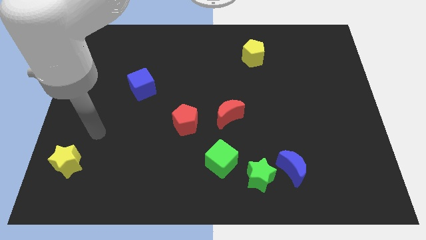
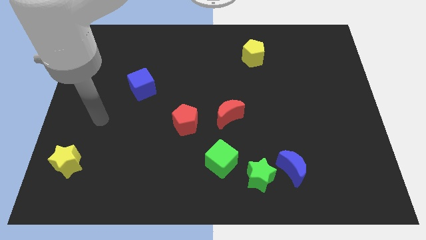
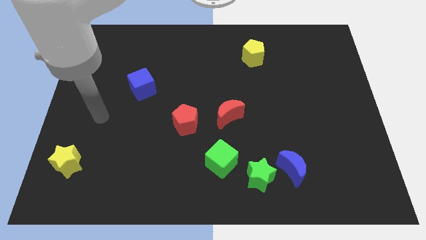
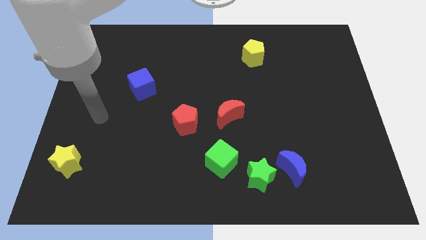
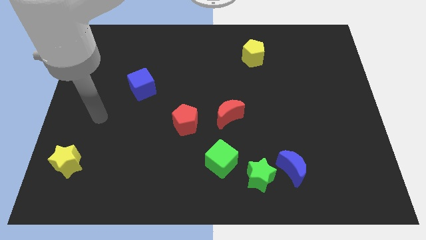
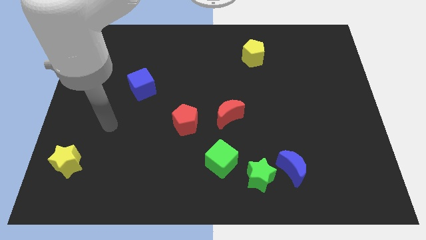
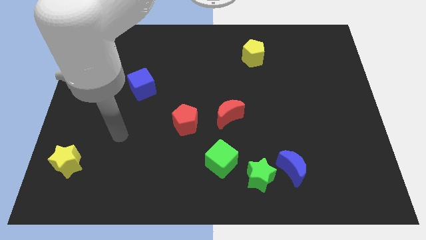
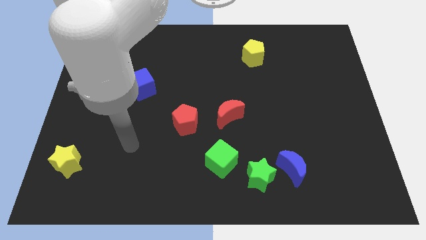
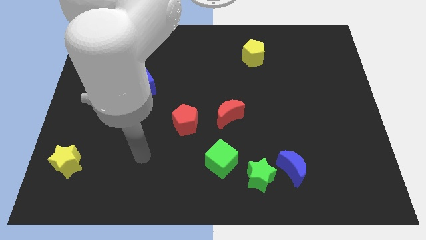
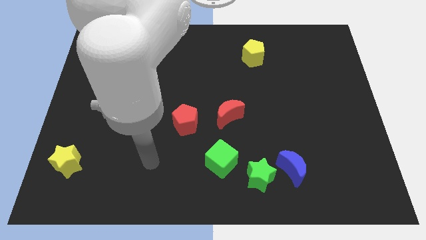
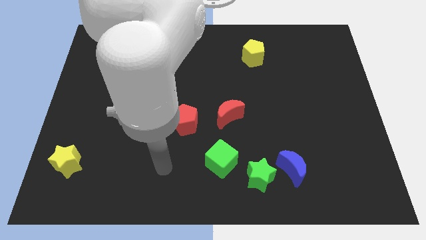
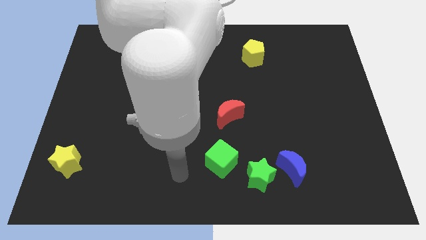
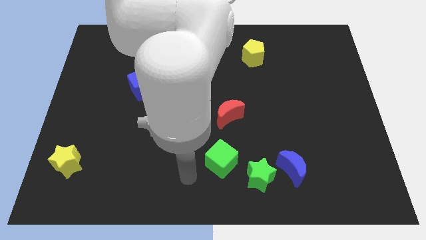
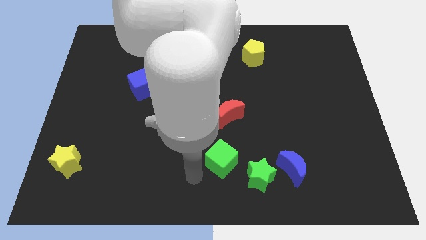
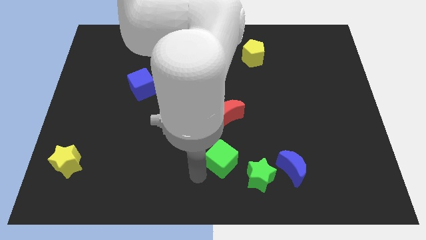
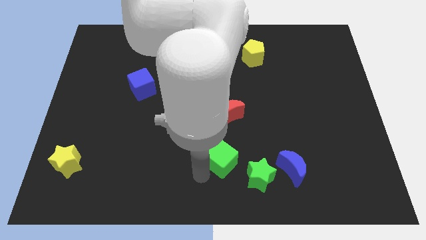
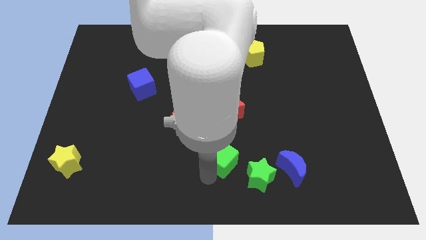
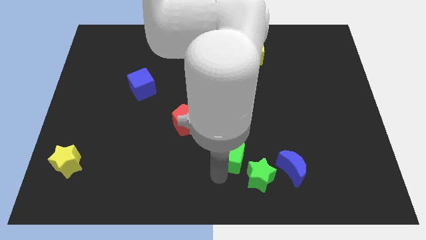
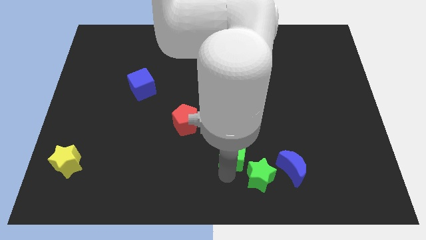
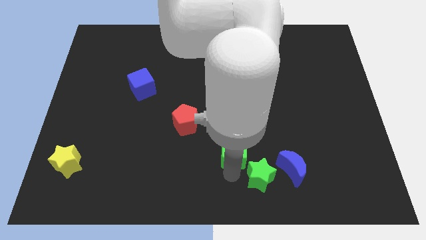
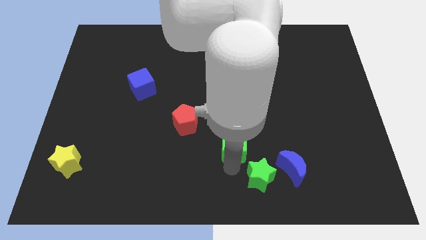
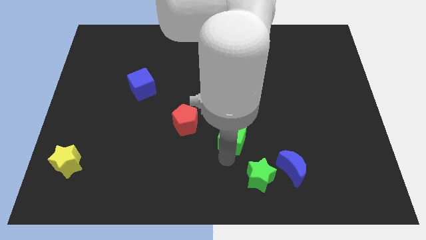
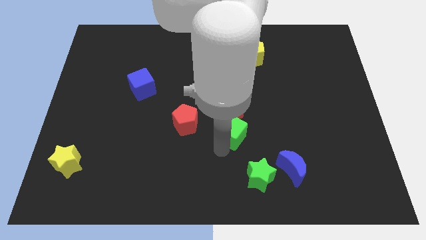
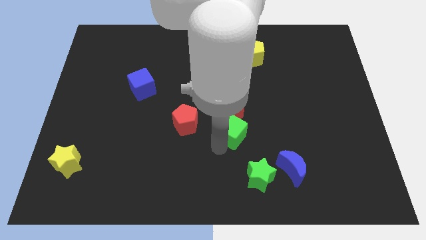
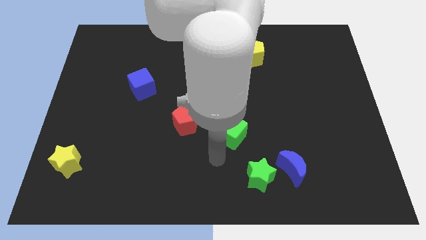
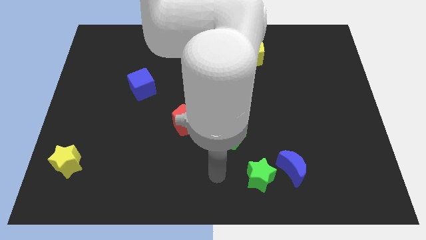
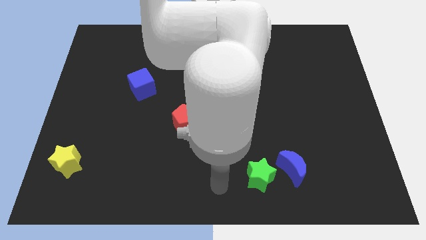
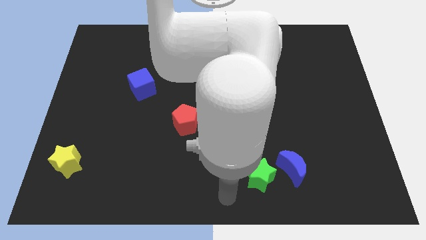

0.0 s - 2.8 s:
push the green cube into the red crescent

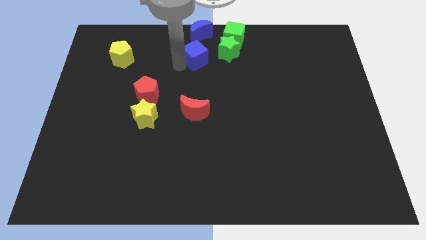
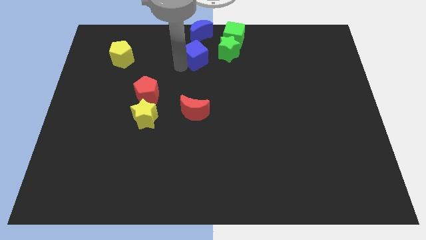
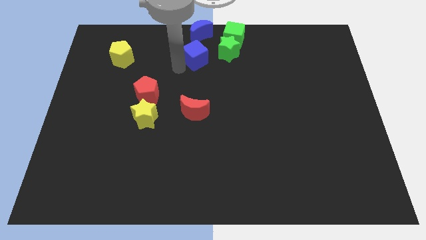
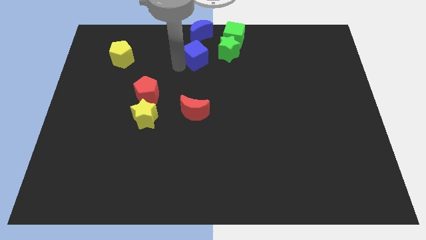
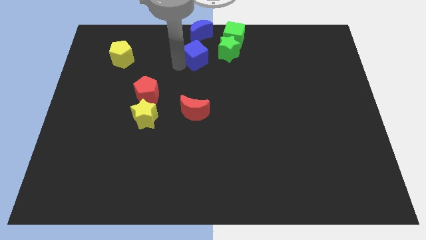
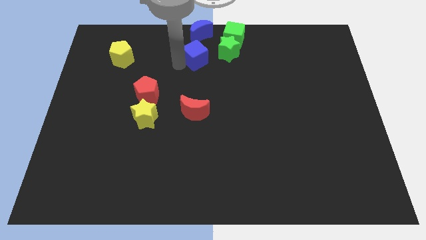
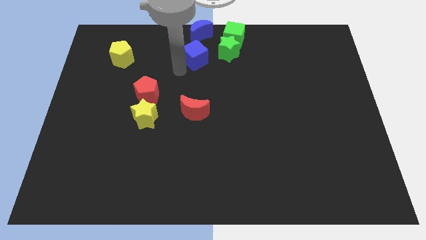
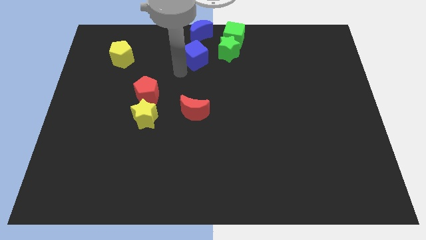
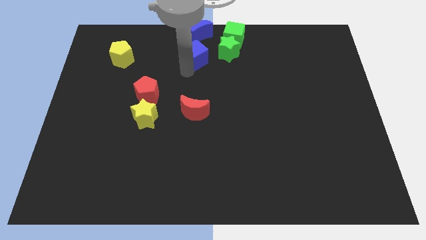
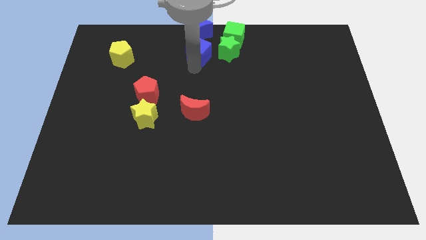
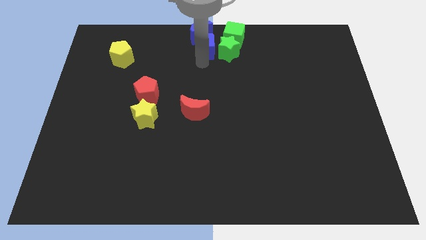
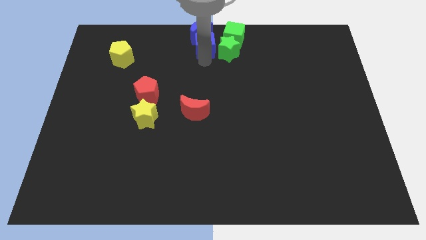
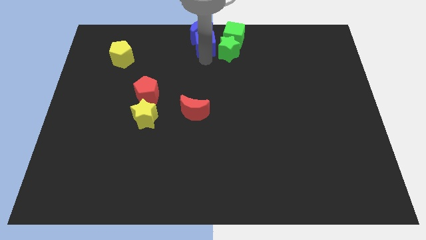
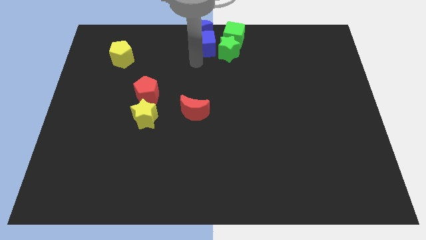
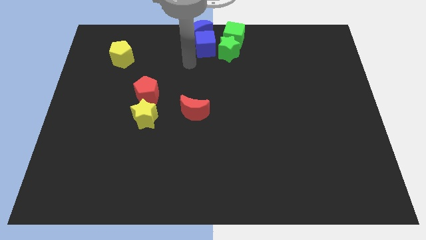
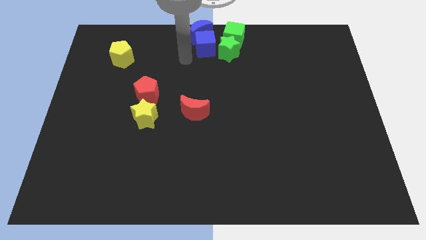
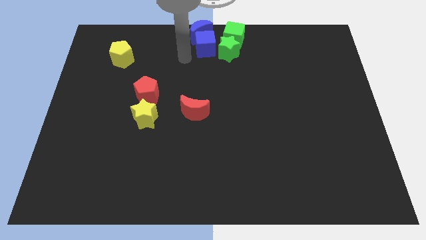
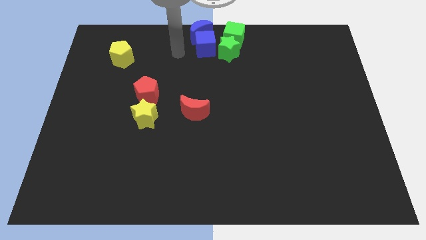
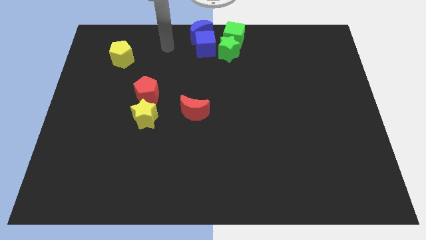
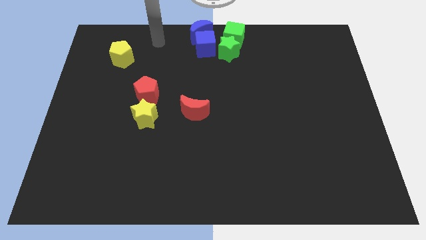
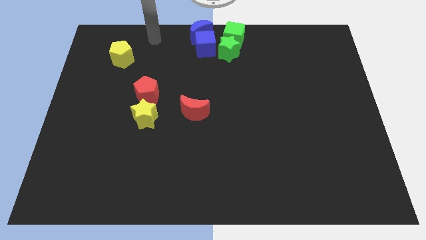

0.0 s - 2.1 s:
move the blue cube into the blue moon

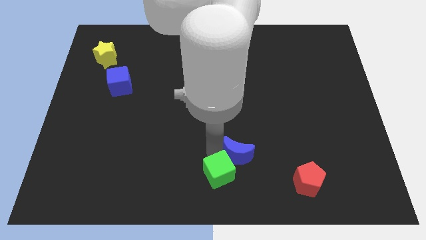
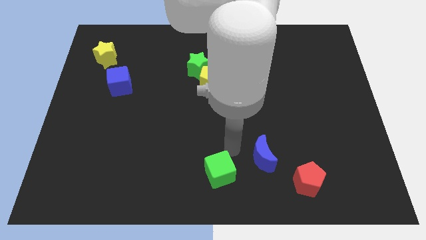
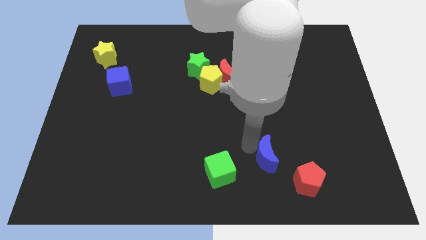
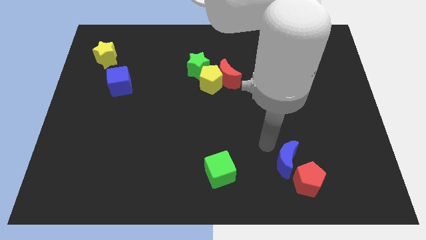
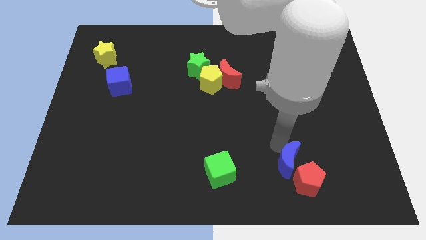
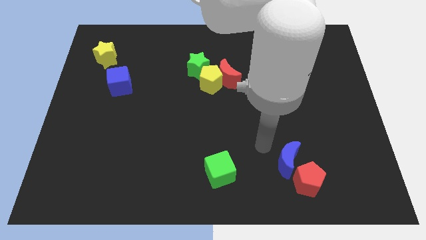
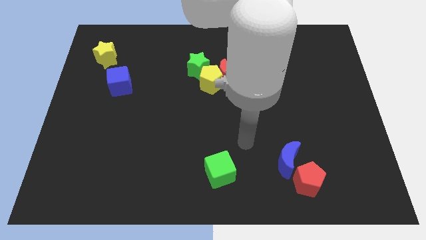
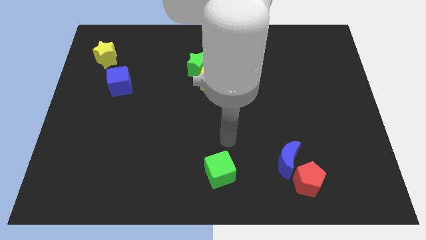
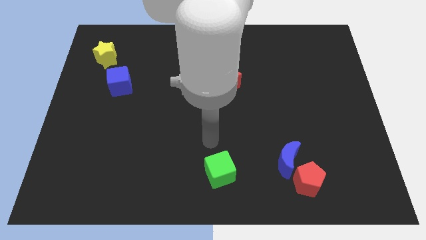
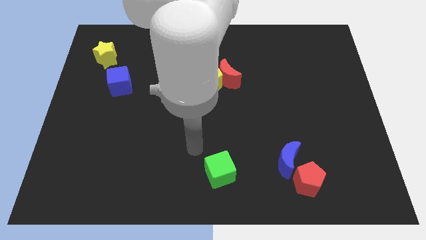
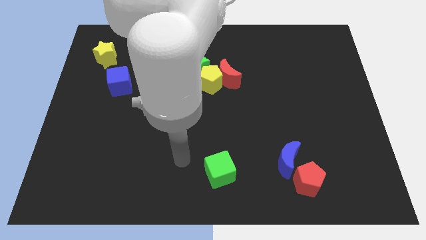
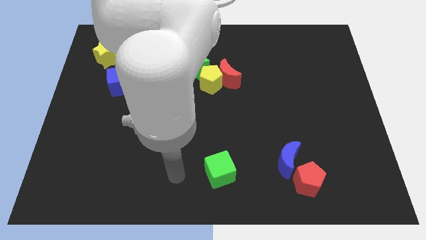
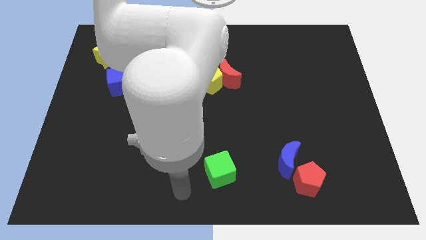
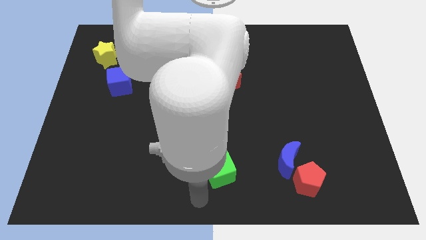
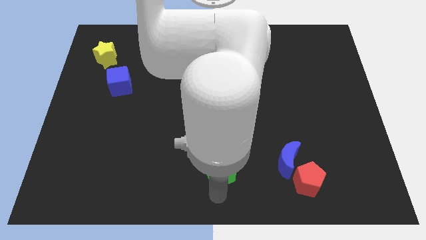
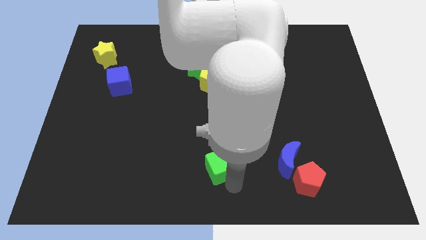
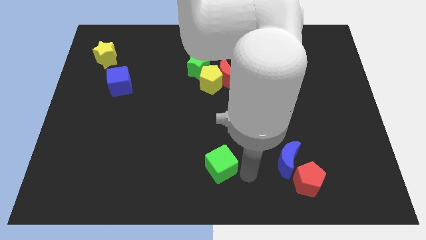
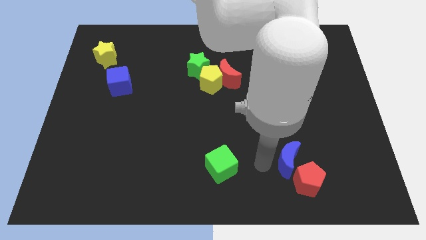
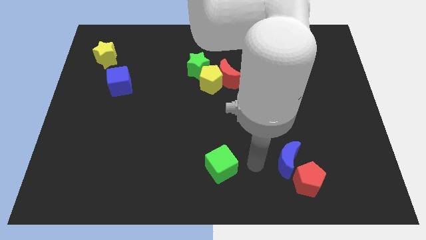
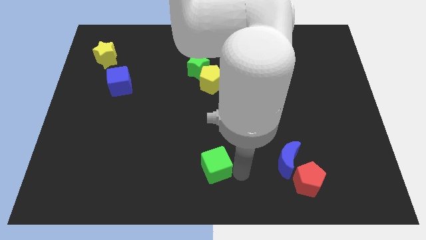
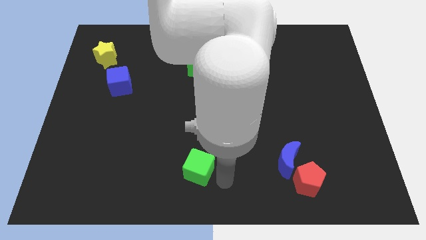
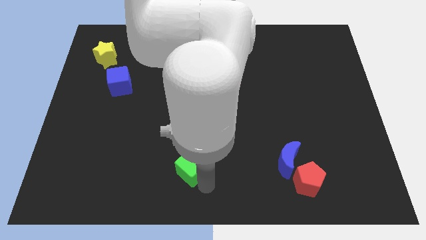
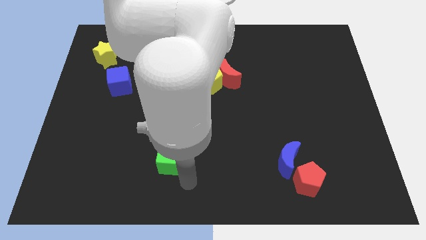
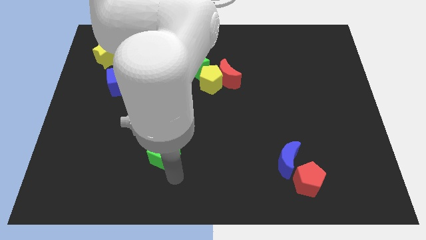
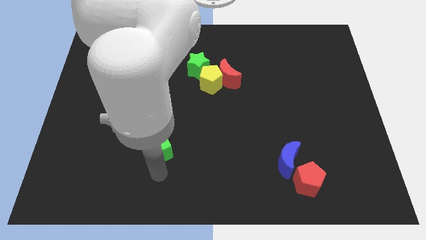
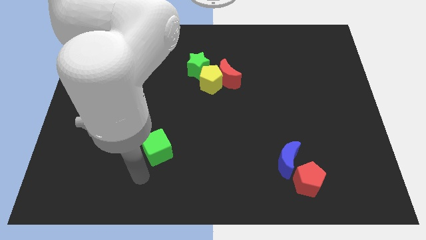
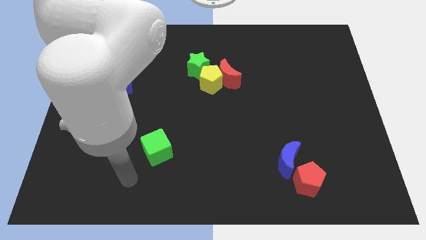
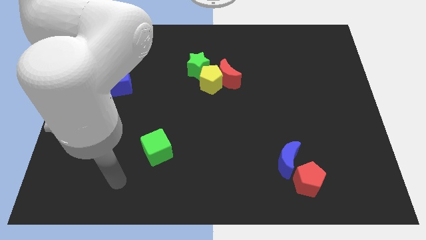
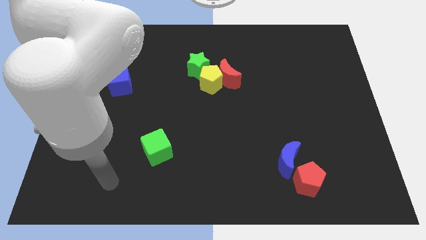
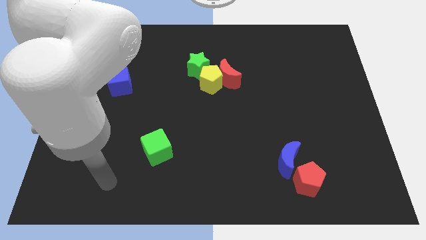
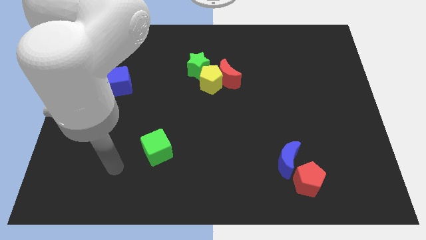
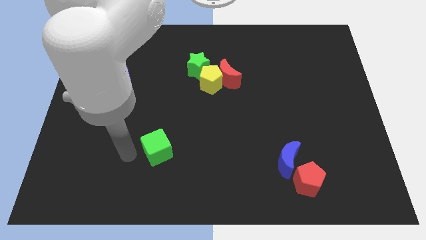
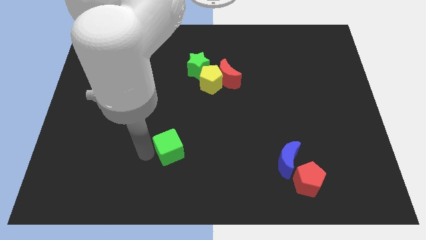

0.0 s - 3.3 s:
separate the blue crescent and the green cube

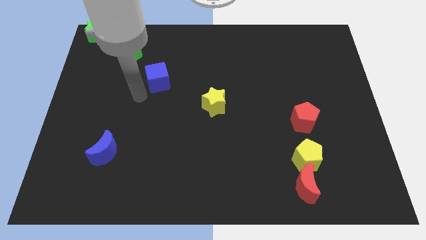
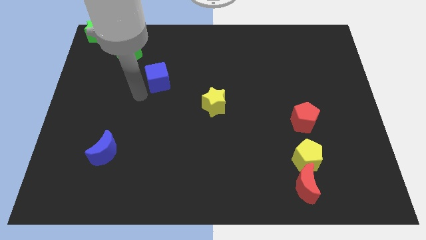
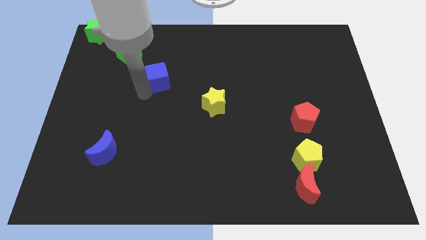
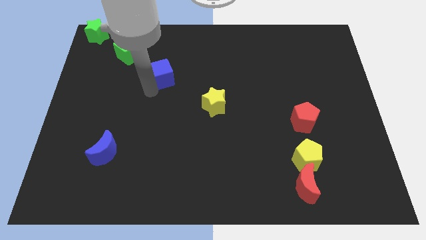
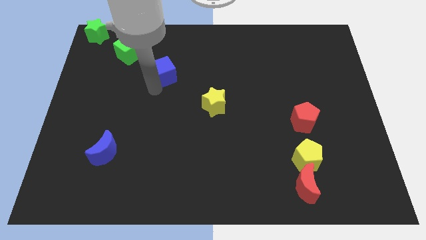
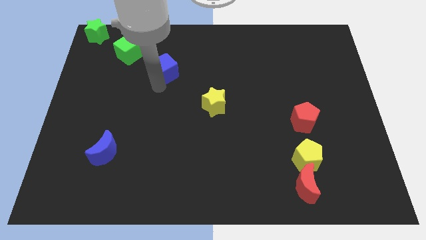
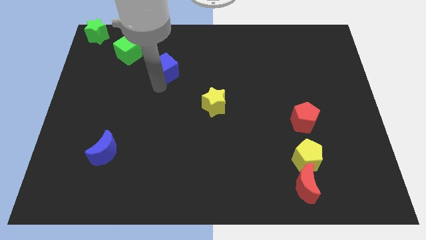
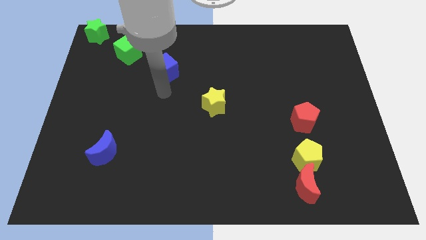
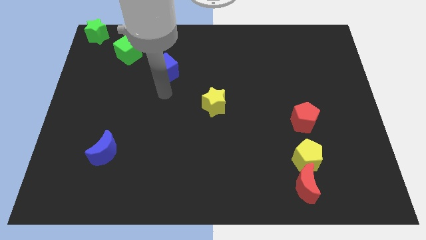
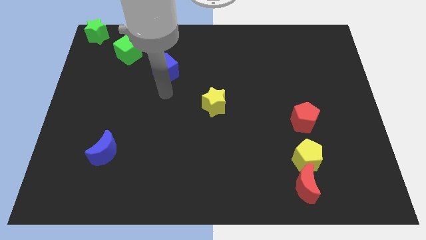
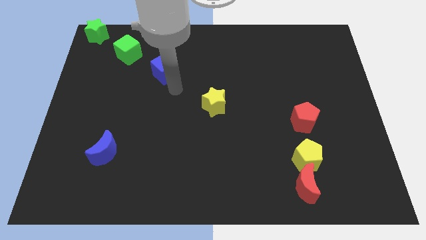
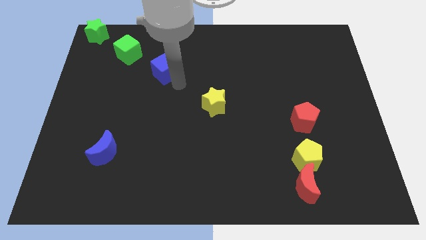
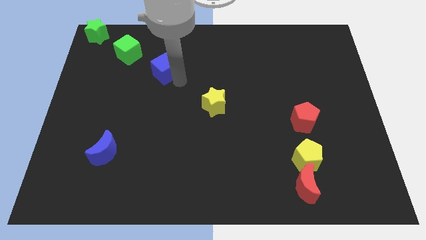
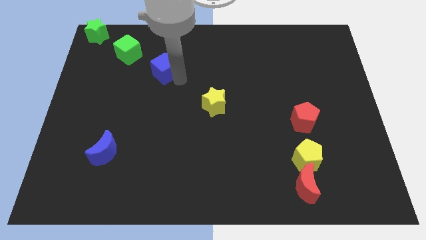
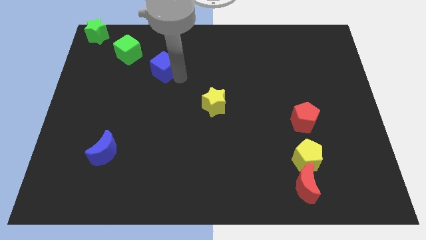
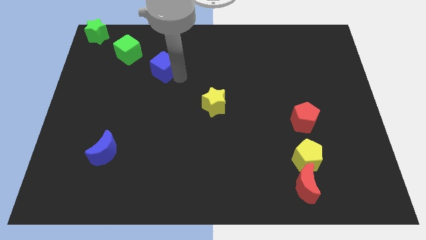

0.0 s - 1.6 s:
move the blue cube diagonally left of the yellow star
